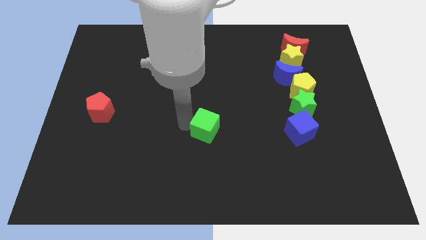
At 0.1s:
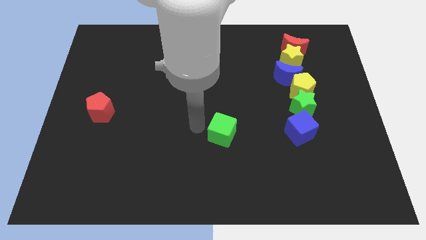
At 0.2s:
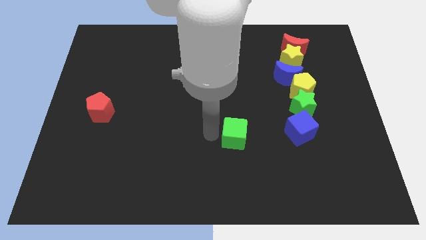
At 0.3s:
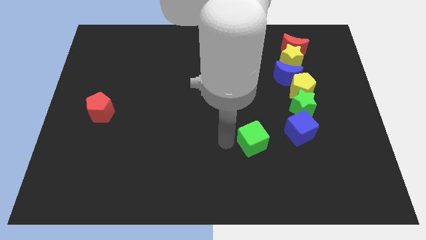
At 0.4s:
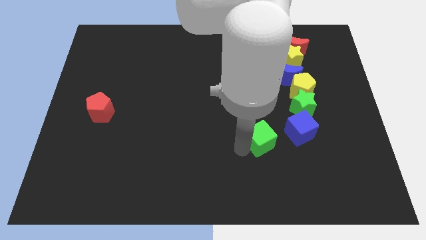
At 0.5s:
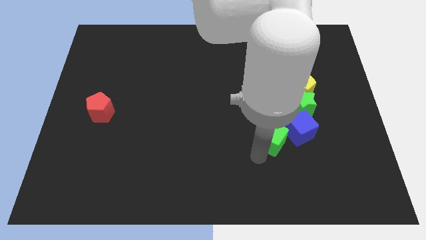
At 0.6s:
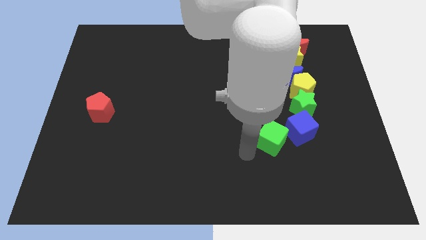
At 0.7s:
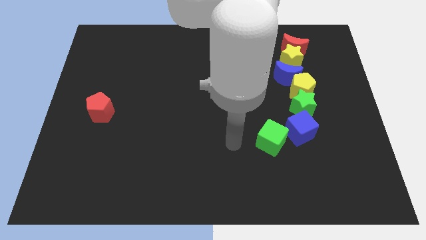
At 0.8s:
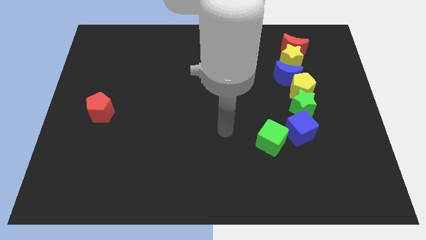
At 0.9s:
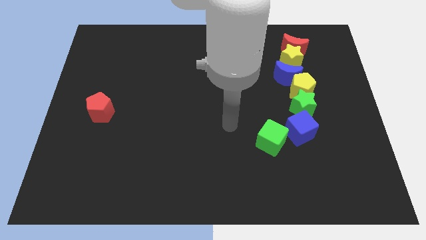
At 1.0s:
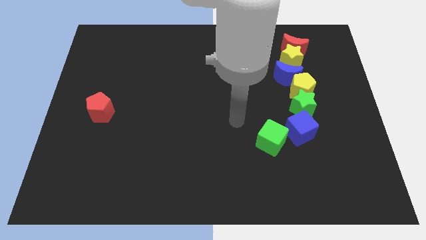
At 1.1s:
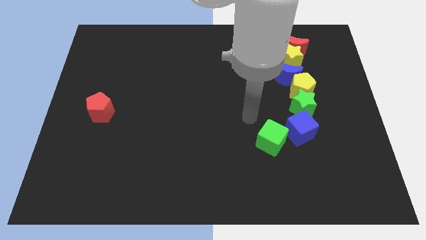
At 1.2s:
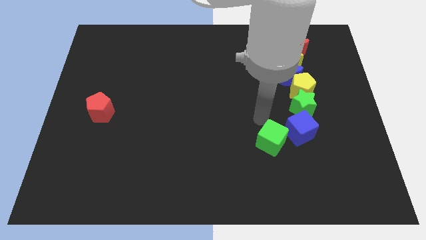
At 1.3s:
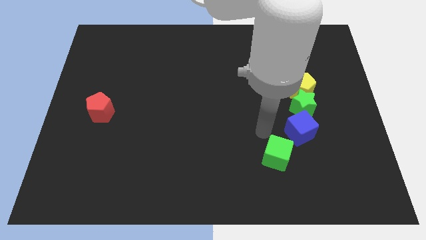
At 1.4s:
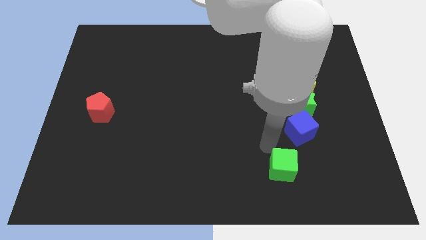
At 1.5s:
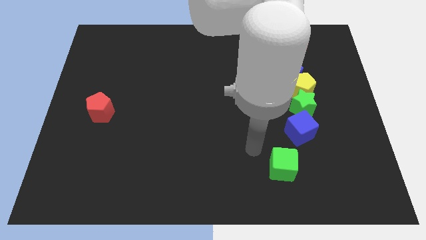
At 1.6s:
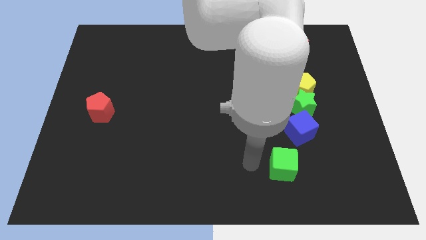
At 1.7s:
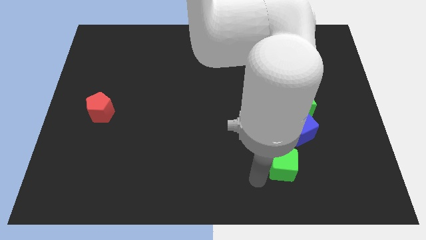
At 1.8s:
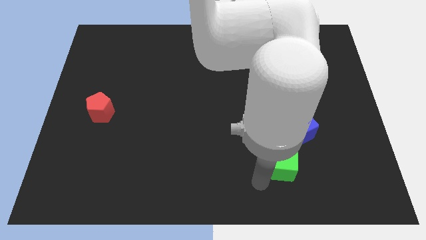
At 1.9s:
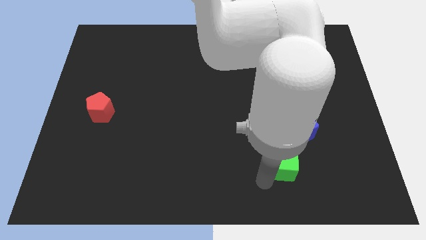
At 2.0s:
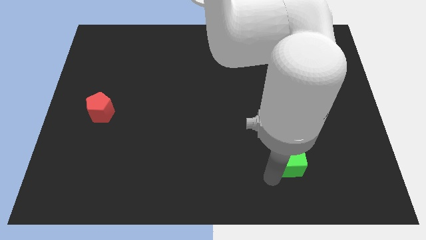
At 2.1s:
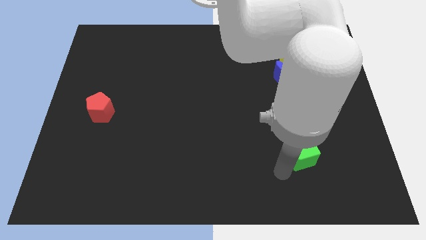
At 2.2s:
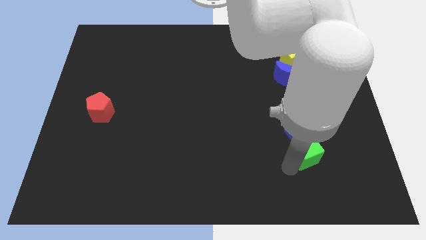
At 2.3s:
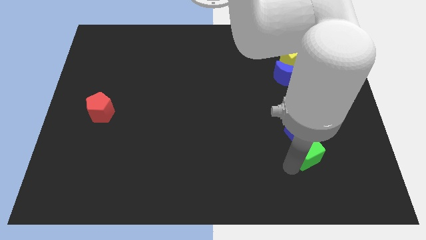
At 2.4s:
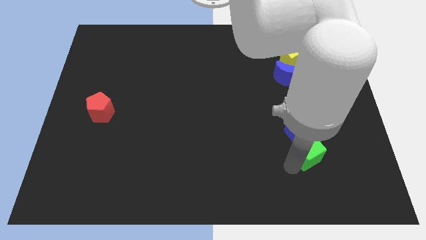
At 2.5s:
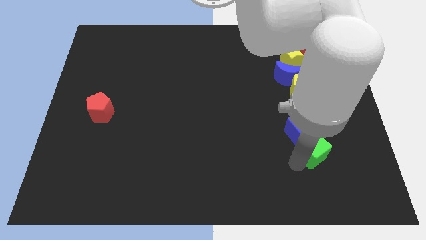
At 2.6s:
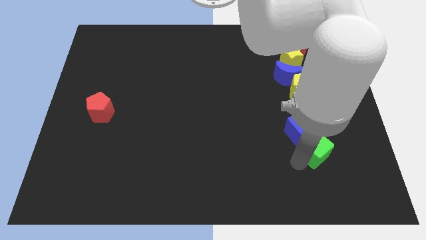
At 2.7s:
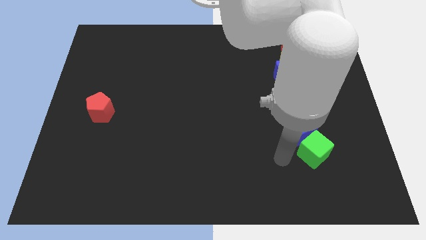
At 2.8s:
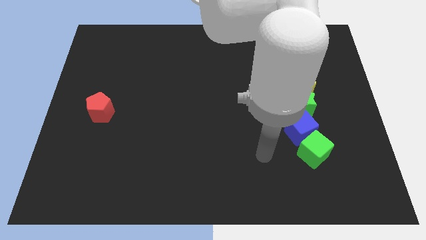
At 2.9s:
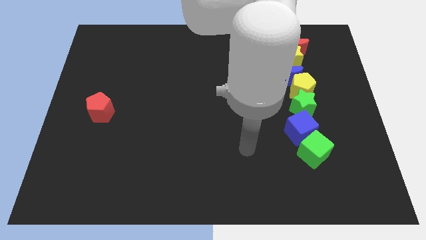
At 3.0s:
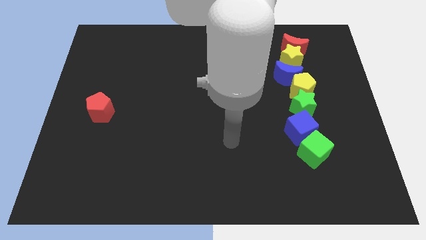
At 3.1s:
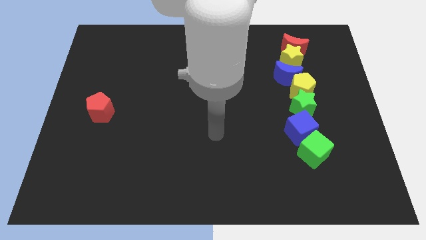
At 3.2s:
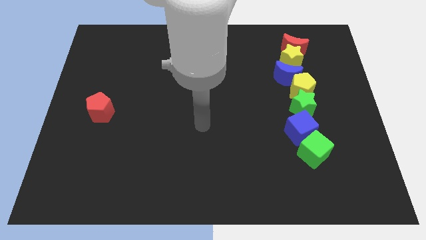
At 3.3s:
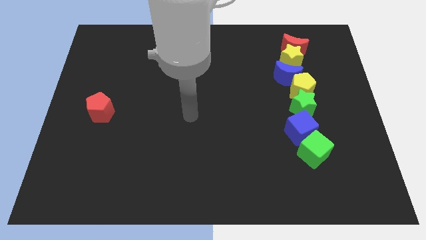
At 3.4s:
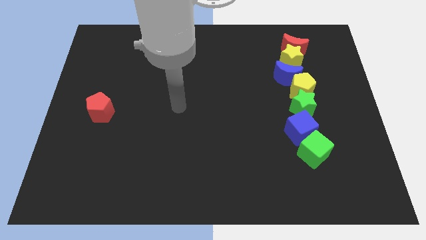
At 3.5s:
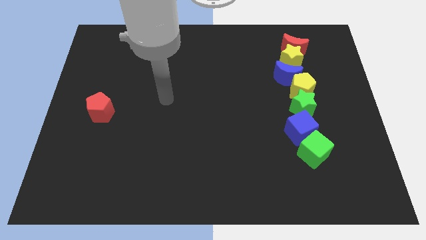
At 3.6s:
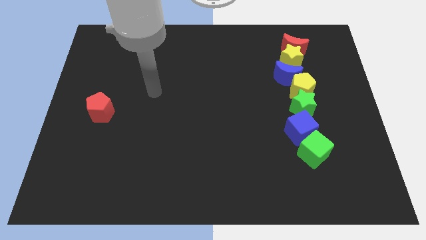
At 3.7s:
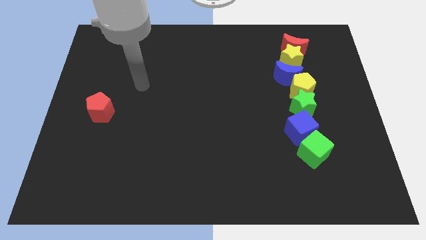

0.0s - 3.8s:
push the green cube to bottom of the blue cube

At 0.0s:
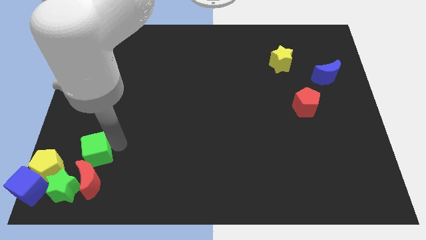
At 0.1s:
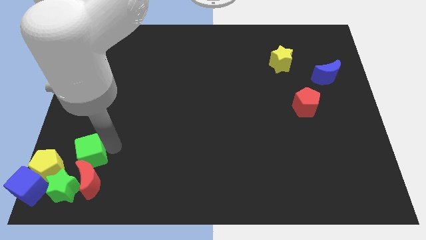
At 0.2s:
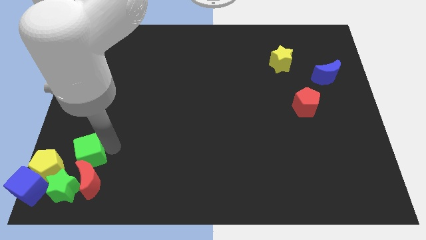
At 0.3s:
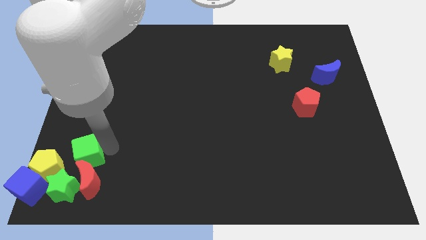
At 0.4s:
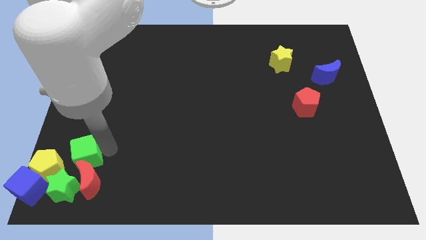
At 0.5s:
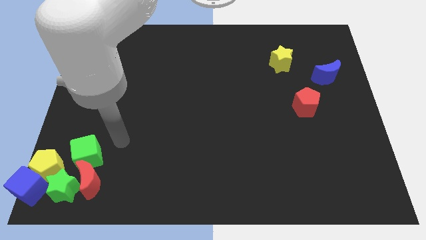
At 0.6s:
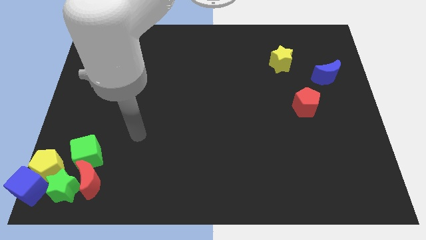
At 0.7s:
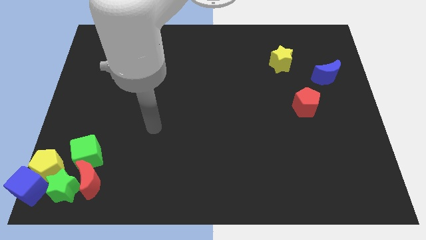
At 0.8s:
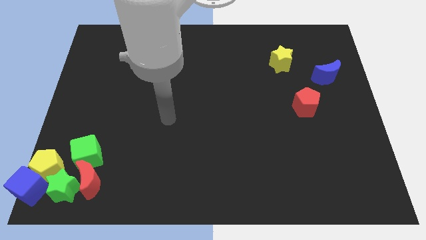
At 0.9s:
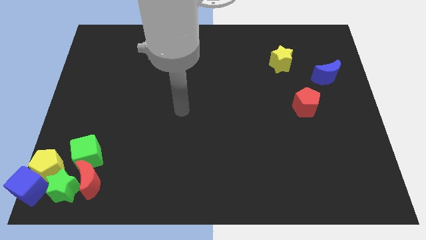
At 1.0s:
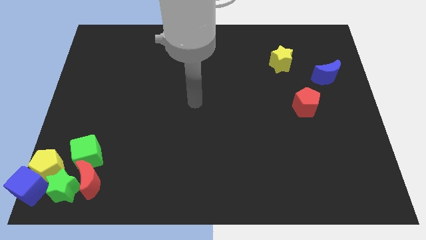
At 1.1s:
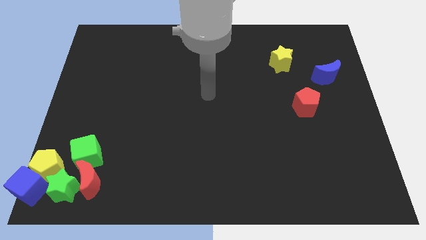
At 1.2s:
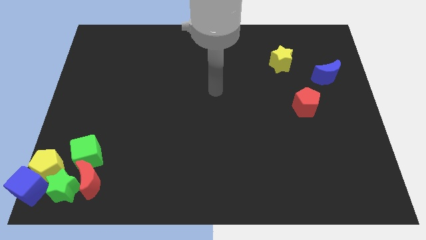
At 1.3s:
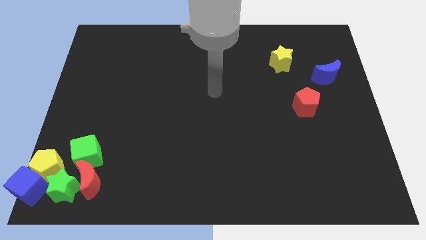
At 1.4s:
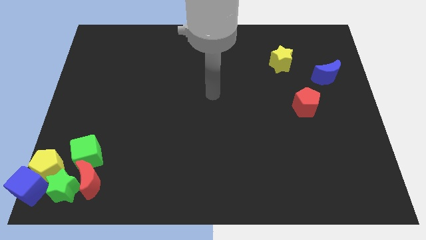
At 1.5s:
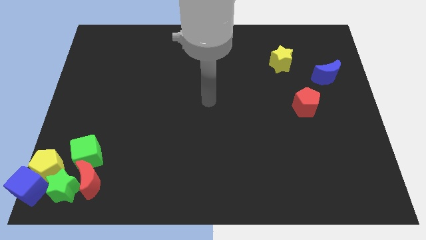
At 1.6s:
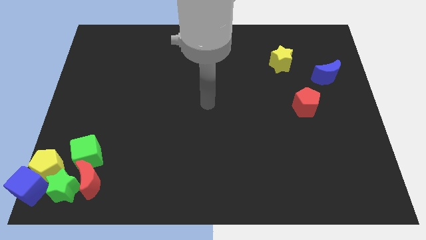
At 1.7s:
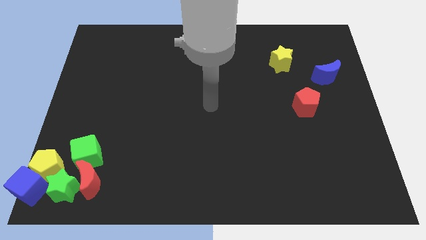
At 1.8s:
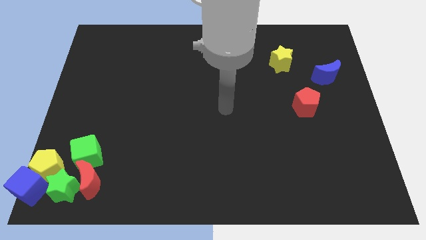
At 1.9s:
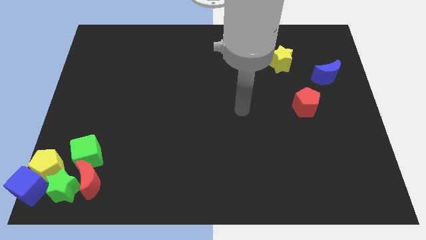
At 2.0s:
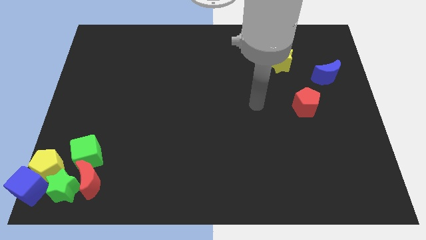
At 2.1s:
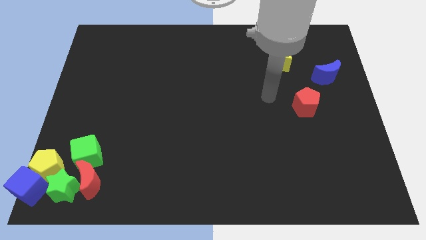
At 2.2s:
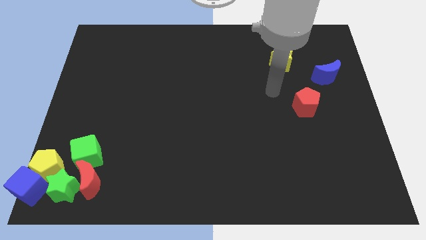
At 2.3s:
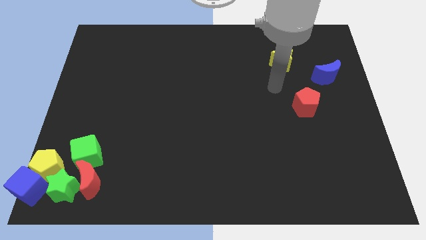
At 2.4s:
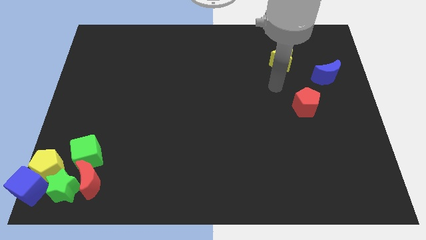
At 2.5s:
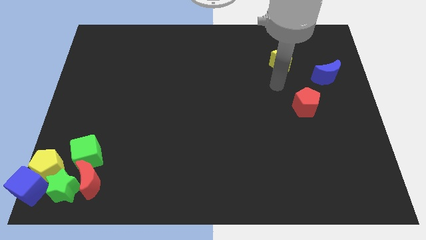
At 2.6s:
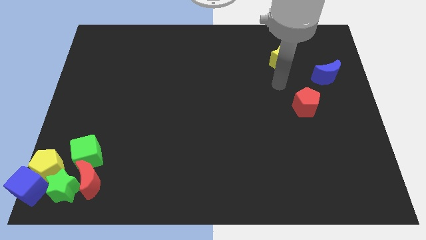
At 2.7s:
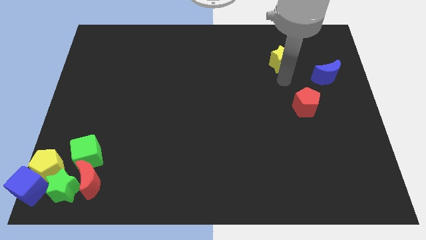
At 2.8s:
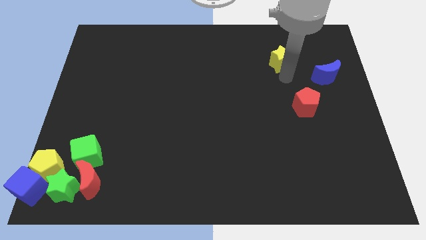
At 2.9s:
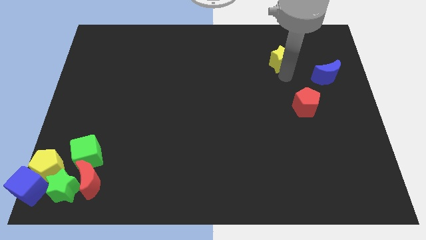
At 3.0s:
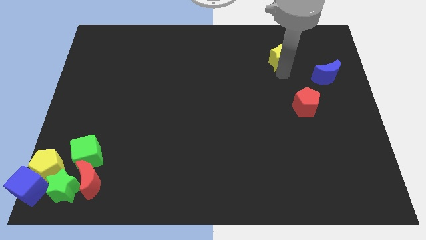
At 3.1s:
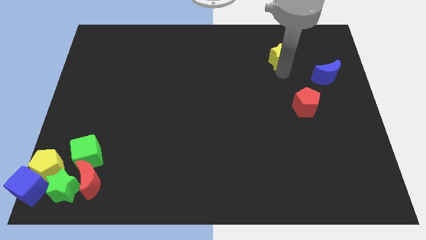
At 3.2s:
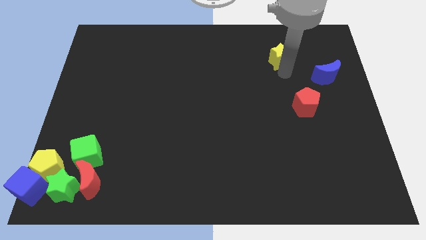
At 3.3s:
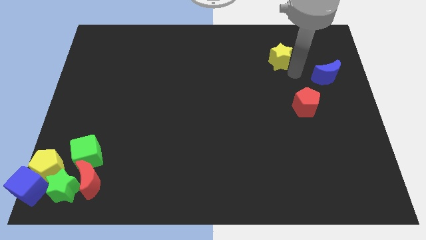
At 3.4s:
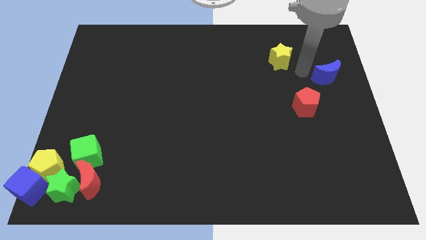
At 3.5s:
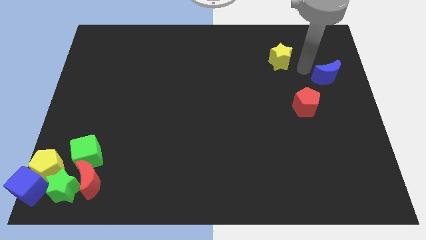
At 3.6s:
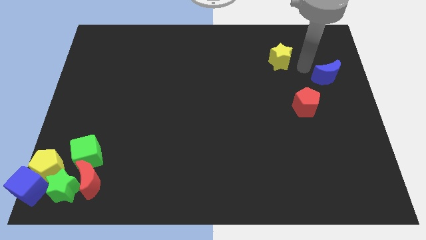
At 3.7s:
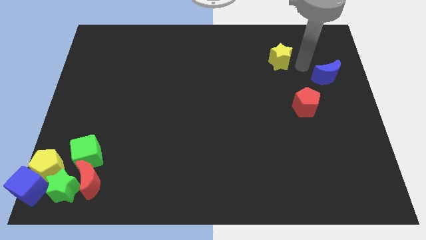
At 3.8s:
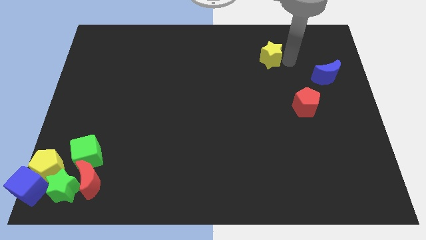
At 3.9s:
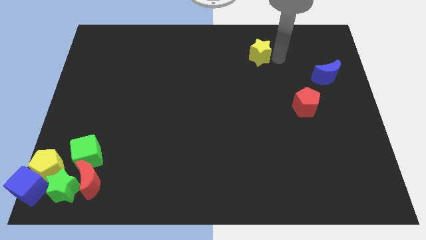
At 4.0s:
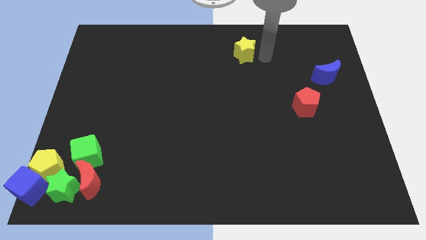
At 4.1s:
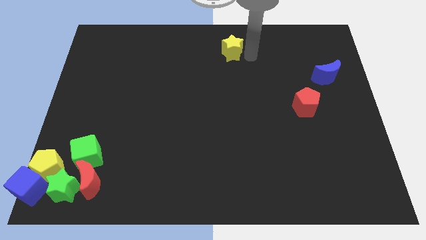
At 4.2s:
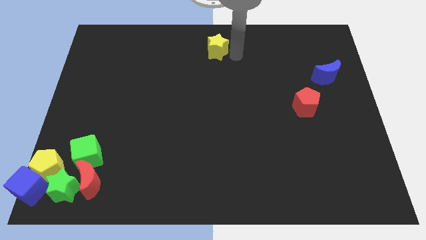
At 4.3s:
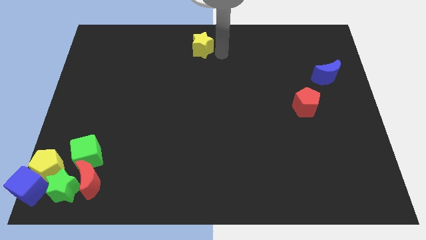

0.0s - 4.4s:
move the yellow star towards the top center

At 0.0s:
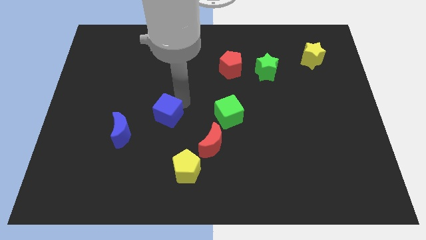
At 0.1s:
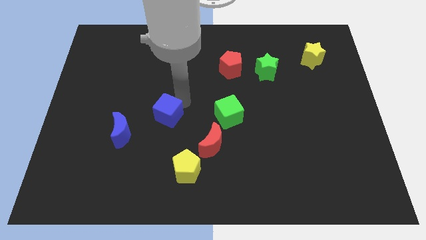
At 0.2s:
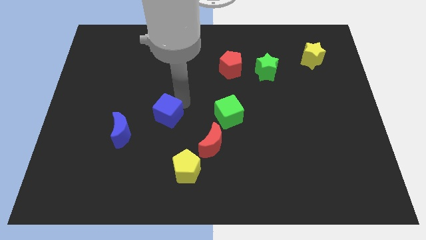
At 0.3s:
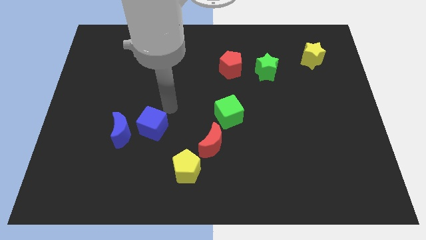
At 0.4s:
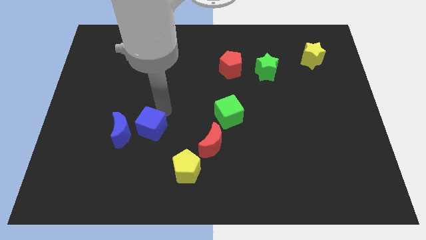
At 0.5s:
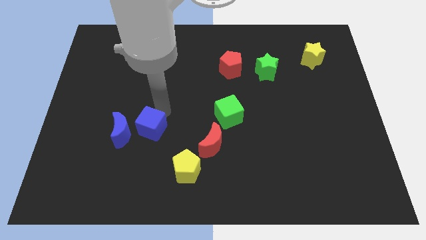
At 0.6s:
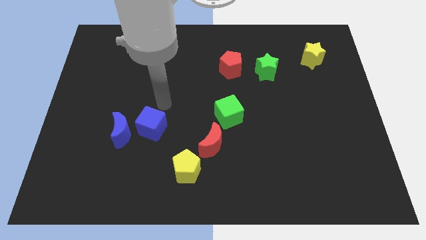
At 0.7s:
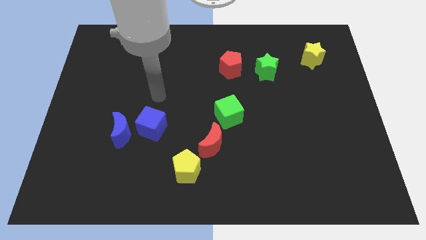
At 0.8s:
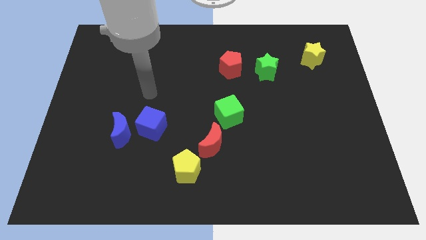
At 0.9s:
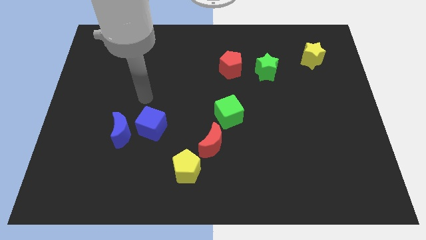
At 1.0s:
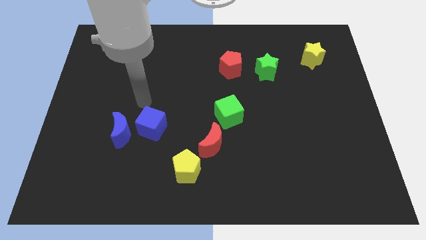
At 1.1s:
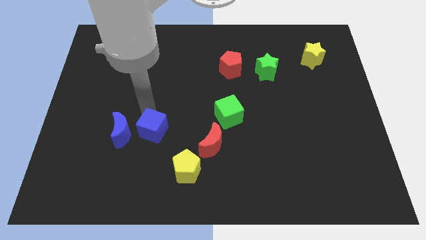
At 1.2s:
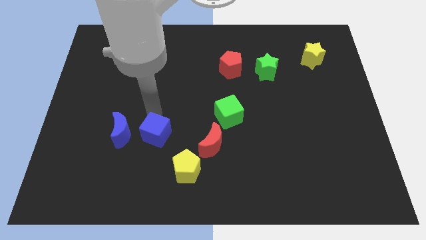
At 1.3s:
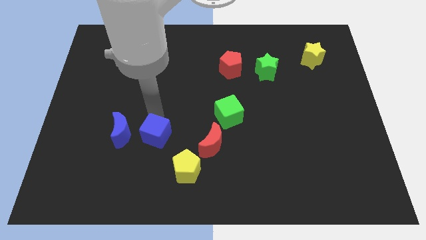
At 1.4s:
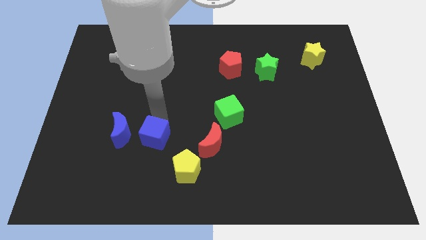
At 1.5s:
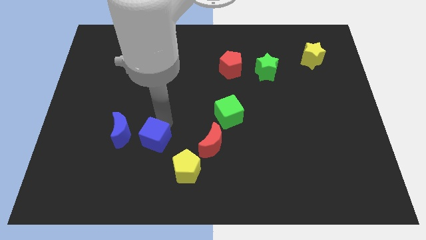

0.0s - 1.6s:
put the blue cube to the right side of the blue crescent
